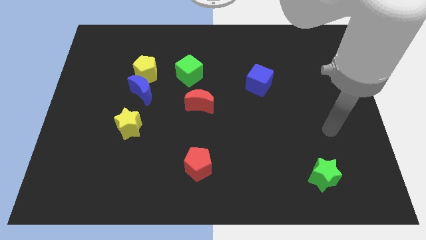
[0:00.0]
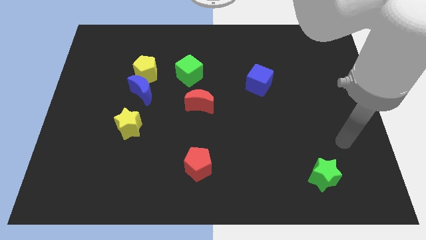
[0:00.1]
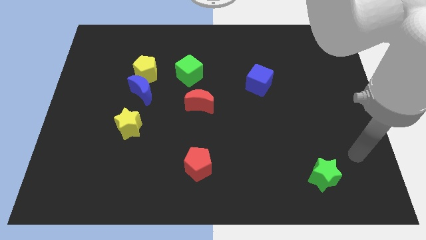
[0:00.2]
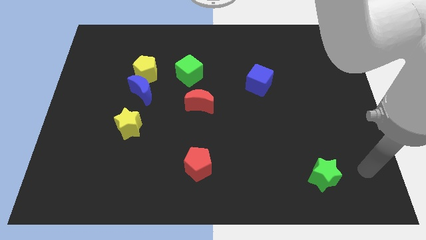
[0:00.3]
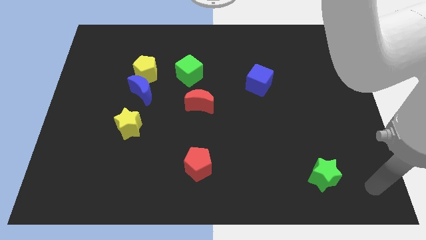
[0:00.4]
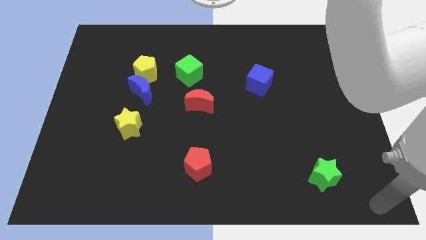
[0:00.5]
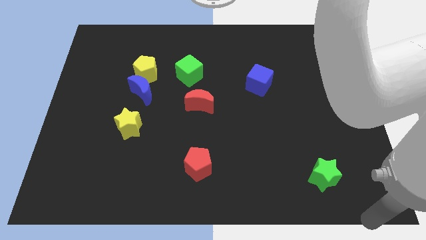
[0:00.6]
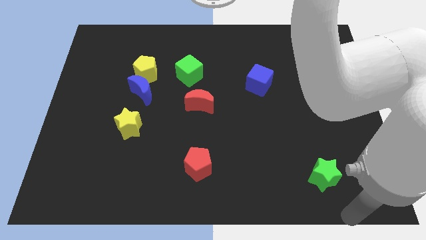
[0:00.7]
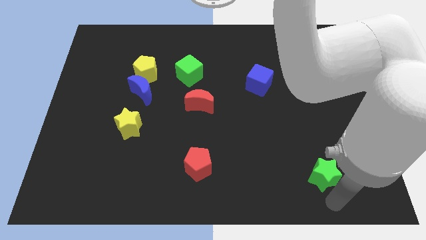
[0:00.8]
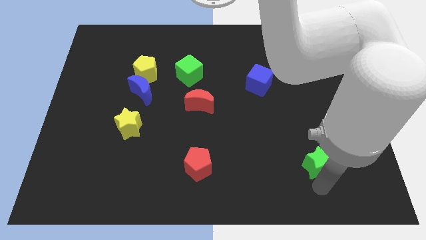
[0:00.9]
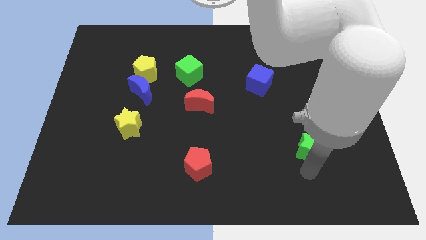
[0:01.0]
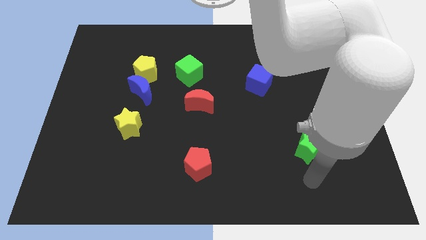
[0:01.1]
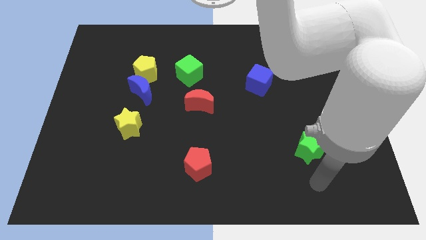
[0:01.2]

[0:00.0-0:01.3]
place the green star diagonally to the blue cube

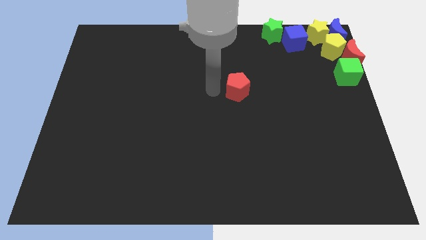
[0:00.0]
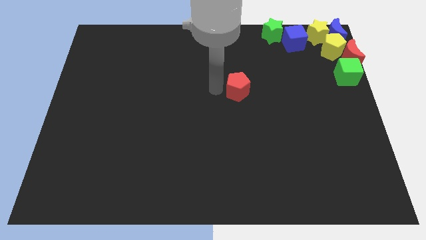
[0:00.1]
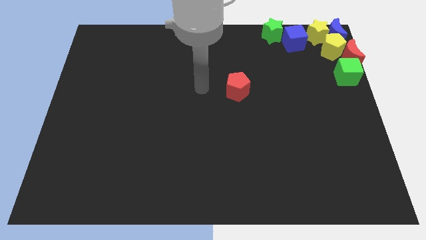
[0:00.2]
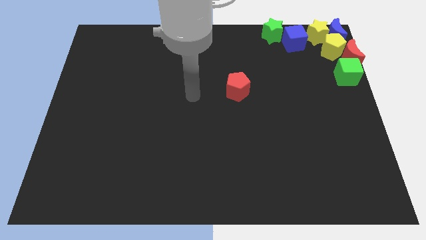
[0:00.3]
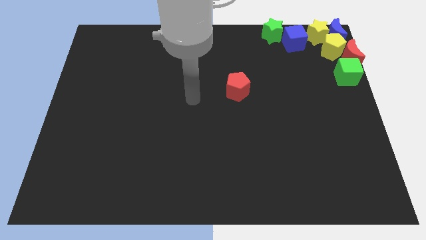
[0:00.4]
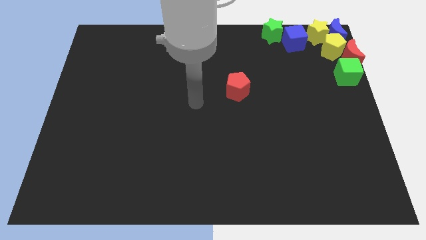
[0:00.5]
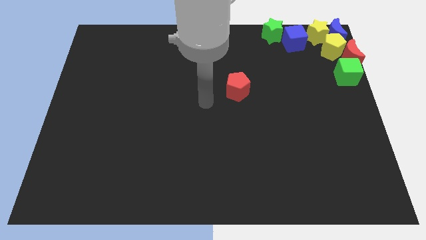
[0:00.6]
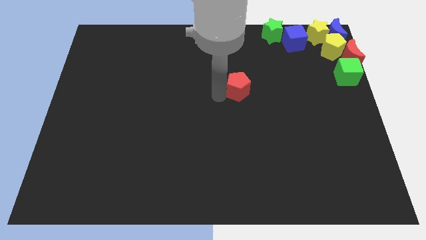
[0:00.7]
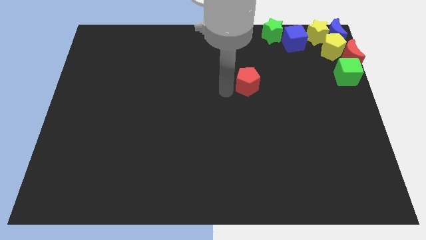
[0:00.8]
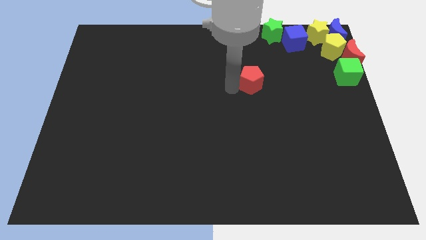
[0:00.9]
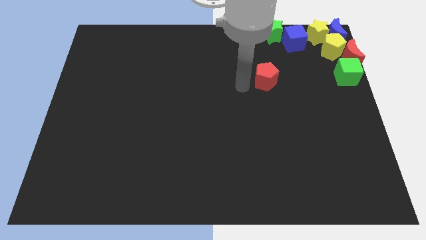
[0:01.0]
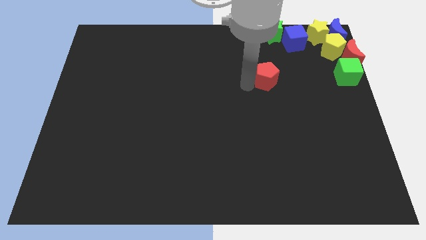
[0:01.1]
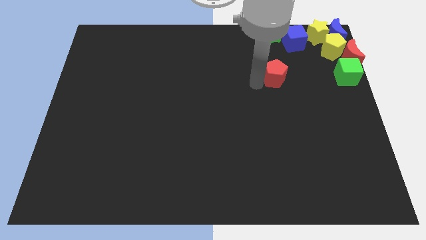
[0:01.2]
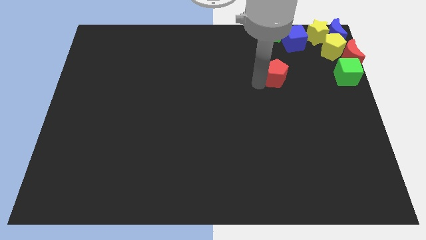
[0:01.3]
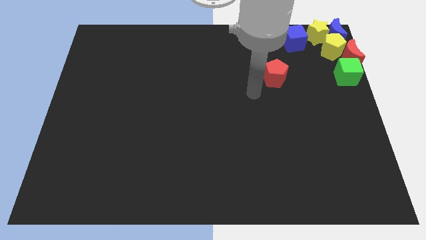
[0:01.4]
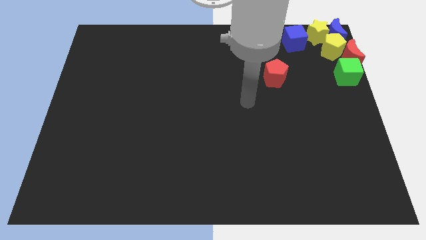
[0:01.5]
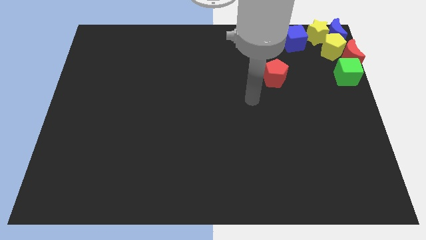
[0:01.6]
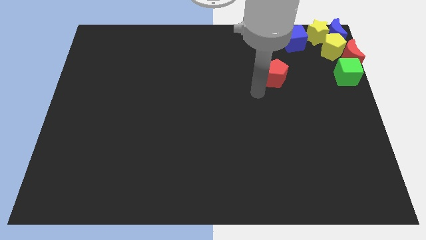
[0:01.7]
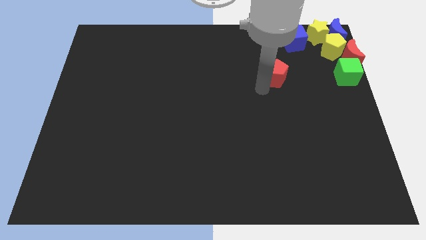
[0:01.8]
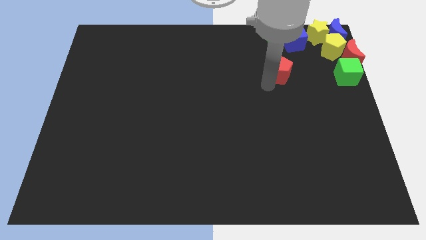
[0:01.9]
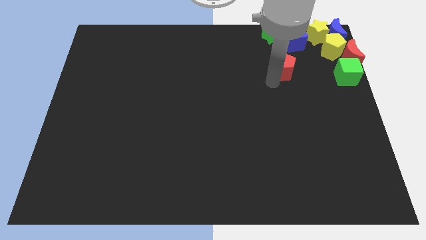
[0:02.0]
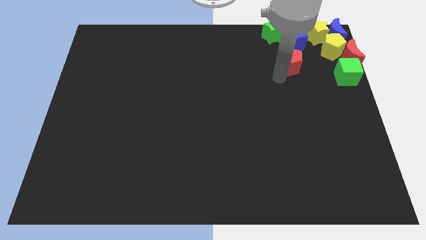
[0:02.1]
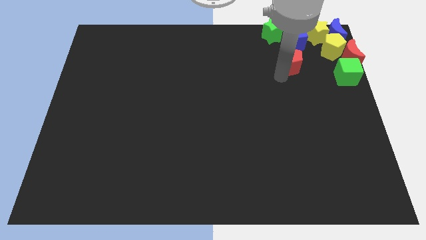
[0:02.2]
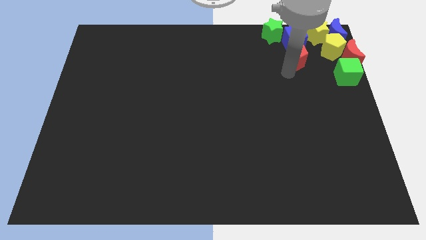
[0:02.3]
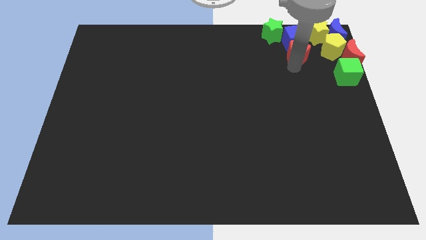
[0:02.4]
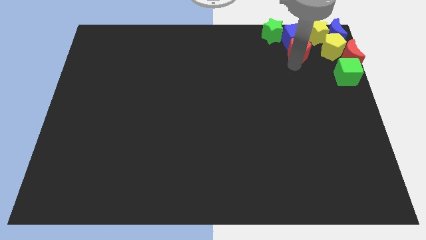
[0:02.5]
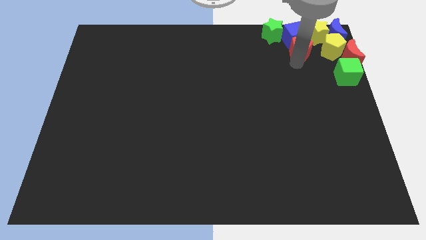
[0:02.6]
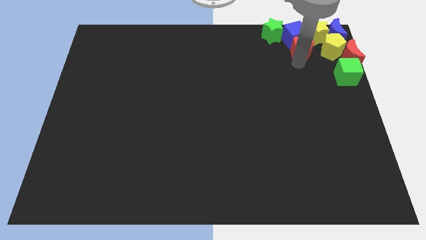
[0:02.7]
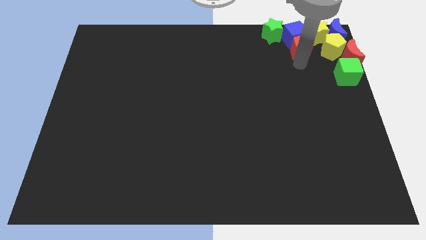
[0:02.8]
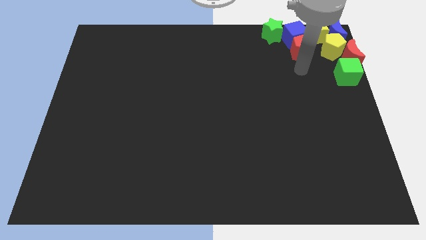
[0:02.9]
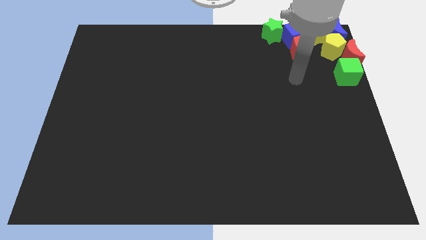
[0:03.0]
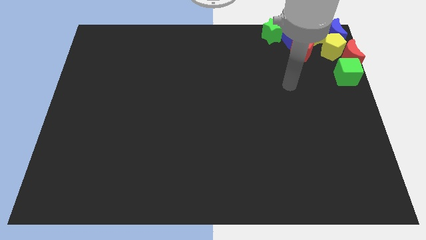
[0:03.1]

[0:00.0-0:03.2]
push the red pentagon into the blue cube

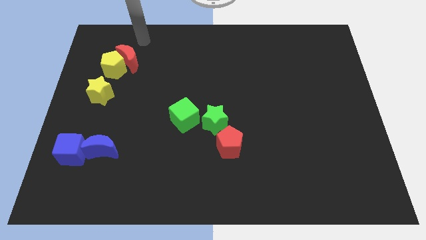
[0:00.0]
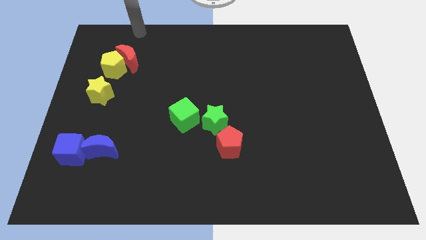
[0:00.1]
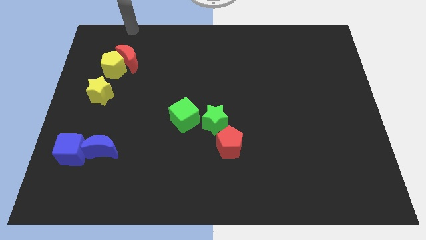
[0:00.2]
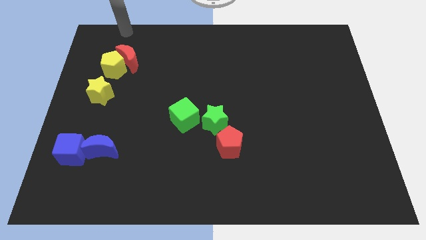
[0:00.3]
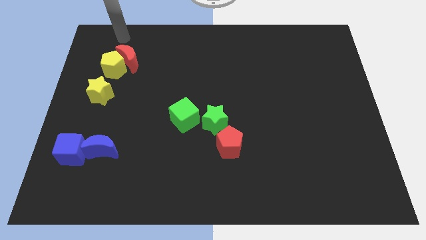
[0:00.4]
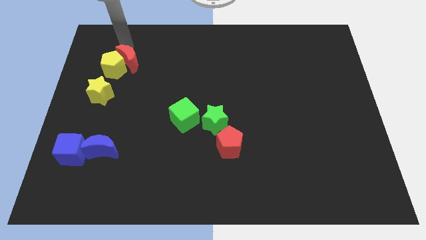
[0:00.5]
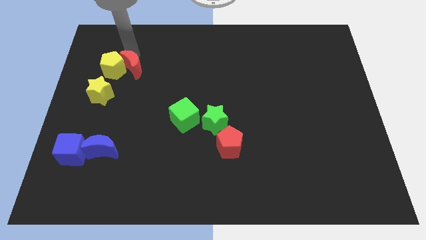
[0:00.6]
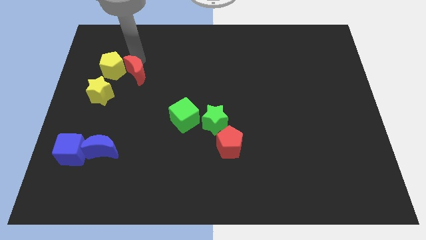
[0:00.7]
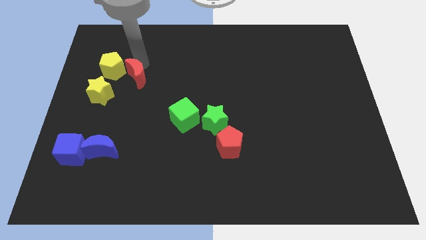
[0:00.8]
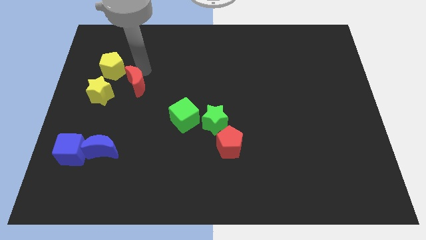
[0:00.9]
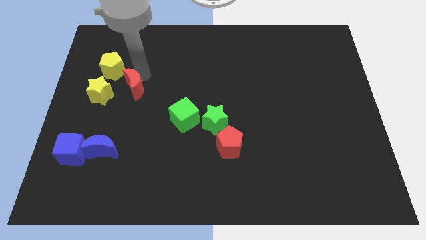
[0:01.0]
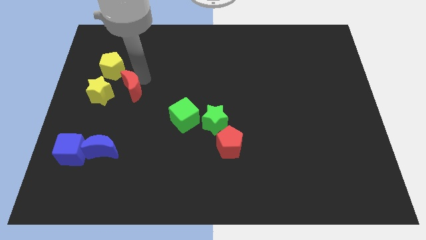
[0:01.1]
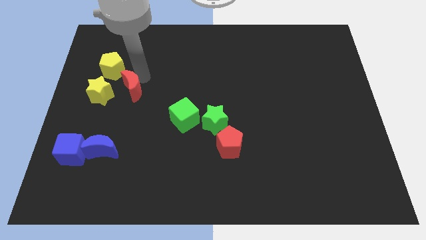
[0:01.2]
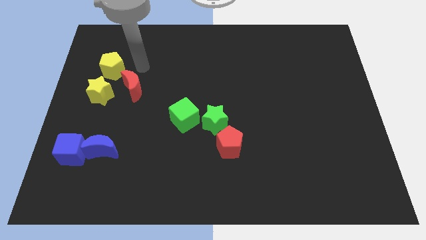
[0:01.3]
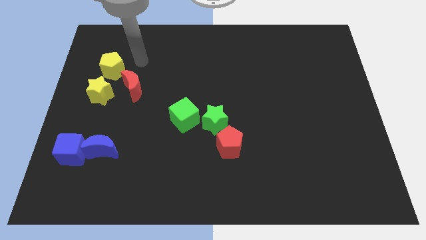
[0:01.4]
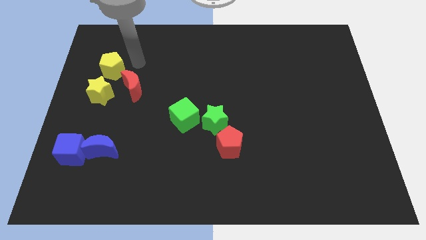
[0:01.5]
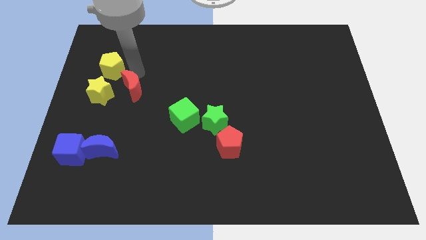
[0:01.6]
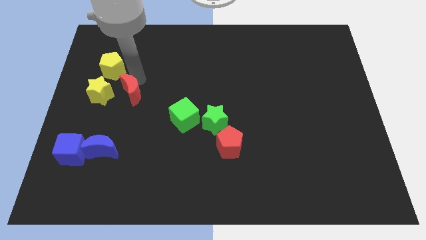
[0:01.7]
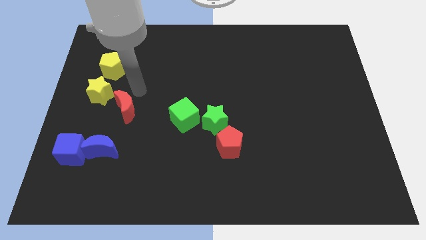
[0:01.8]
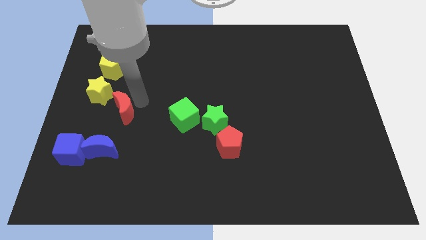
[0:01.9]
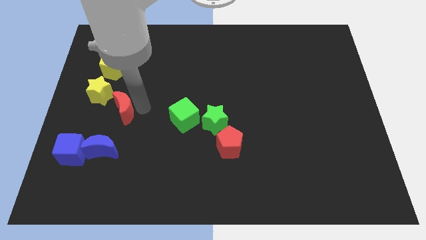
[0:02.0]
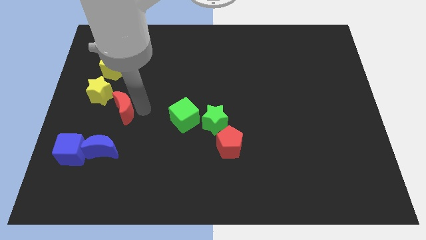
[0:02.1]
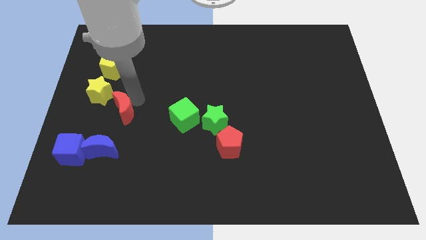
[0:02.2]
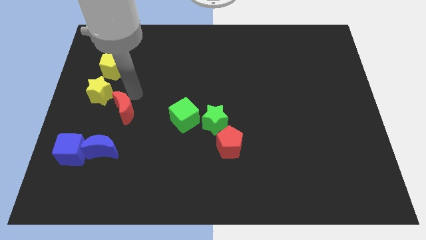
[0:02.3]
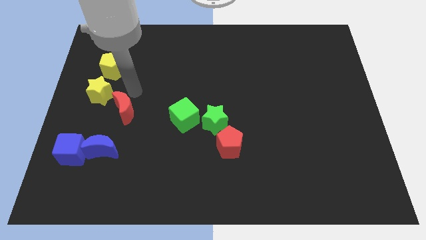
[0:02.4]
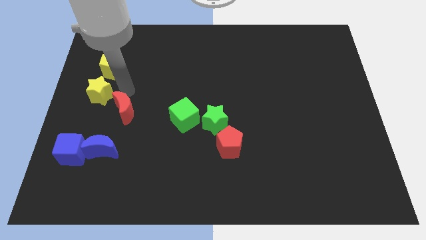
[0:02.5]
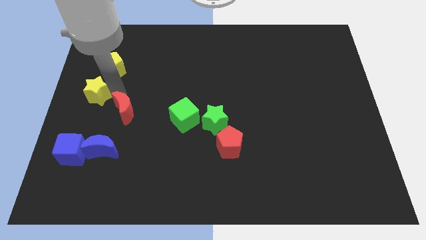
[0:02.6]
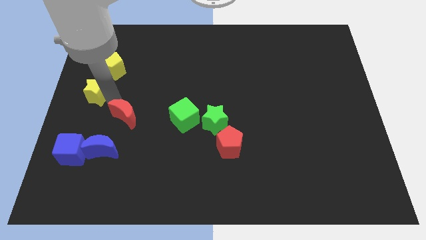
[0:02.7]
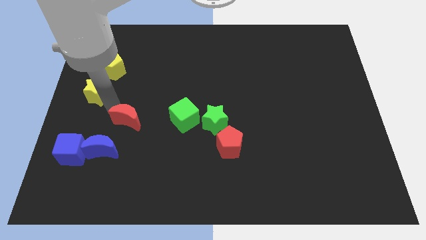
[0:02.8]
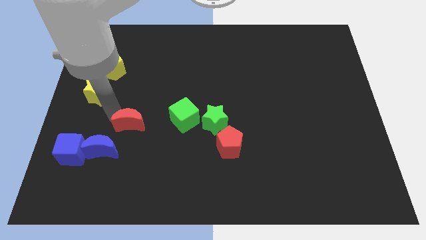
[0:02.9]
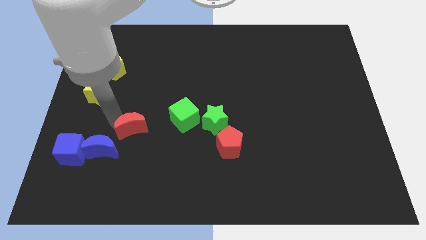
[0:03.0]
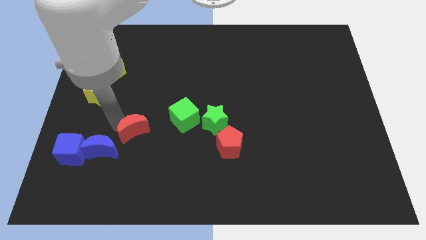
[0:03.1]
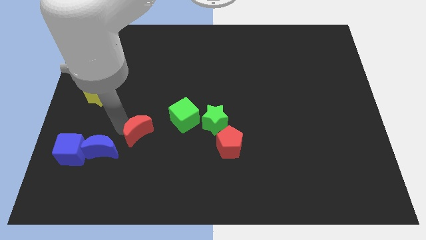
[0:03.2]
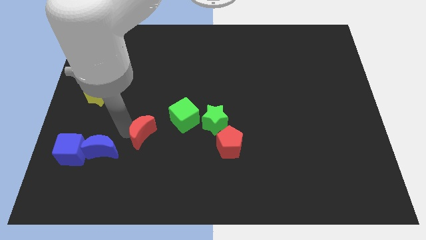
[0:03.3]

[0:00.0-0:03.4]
put the red moon to the top right of the blue crescent

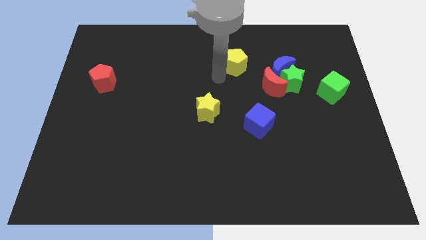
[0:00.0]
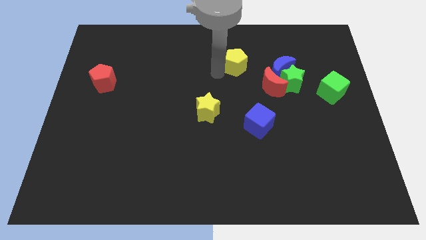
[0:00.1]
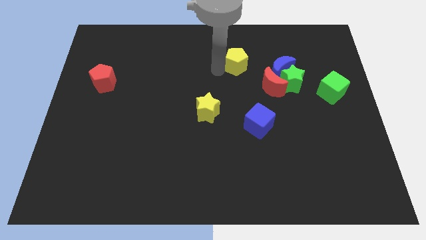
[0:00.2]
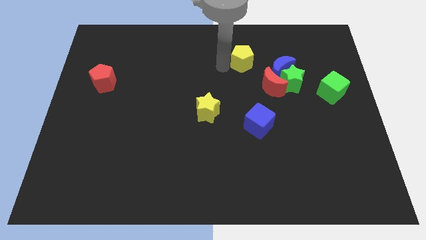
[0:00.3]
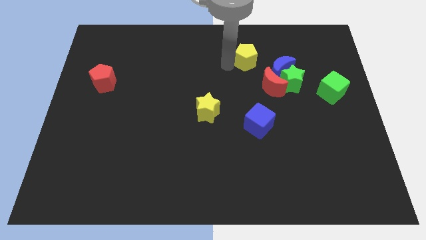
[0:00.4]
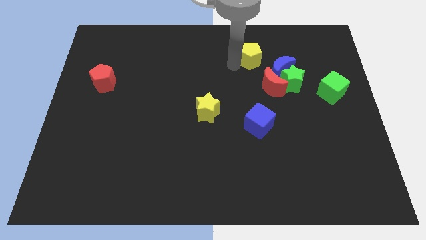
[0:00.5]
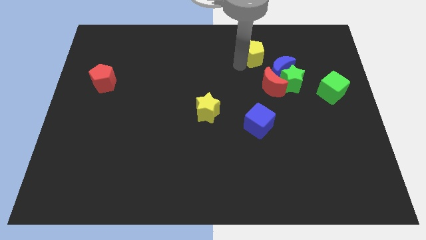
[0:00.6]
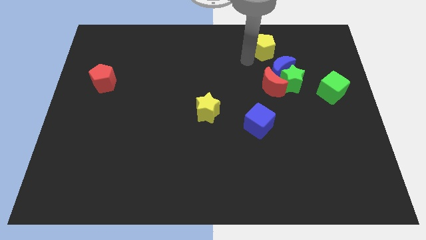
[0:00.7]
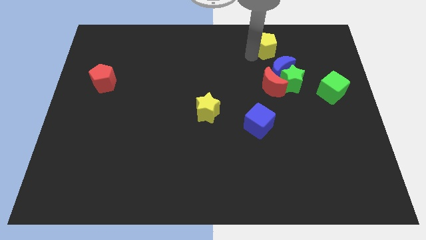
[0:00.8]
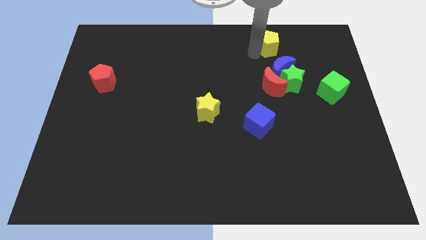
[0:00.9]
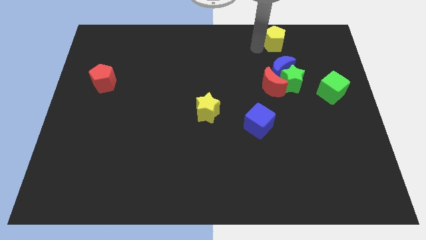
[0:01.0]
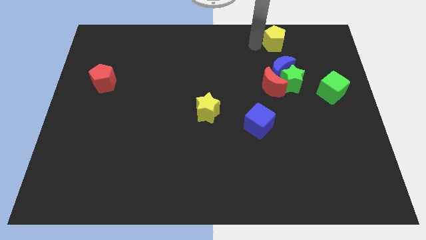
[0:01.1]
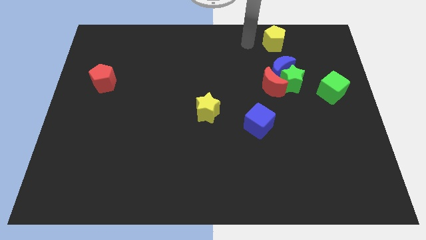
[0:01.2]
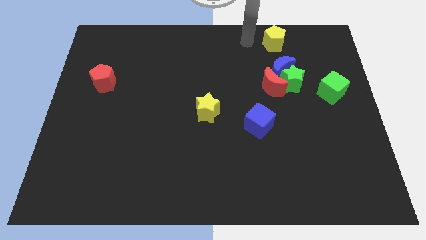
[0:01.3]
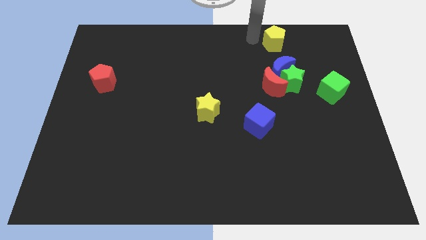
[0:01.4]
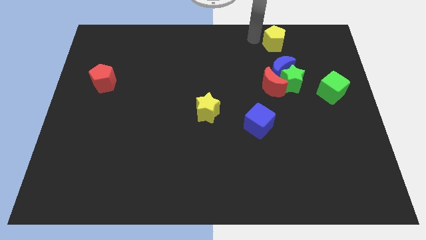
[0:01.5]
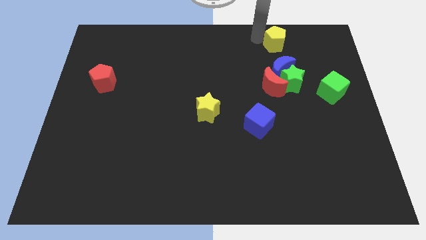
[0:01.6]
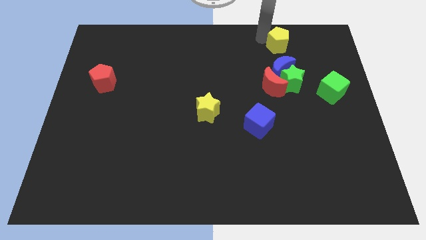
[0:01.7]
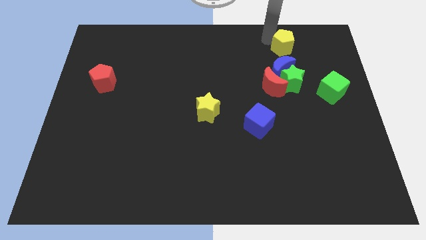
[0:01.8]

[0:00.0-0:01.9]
place the yellow pentagon to the top side of the blue crescent
